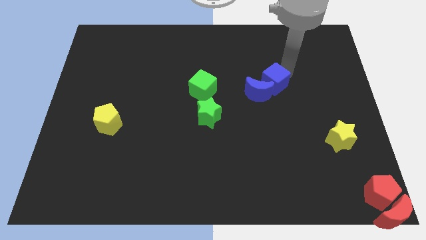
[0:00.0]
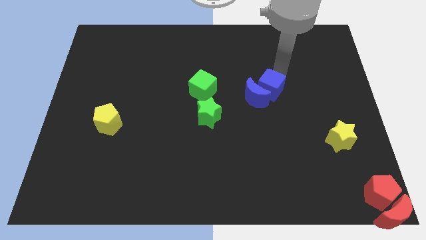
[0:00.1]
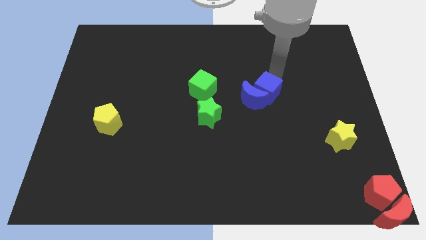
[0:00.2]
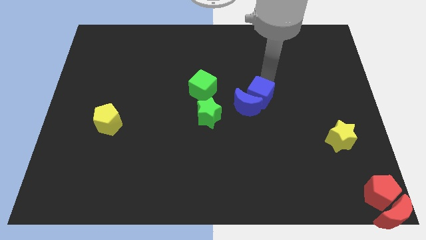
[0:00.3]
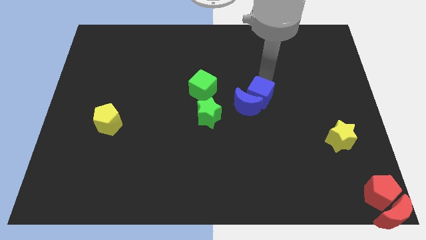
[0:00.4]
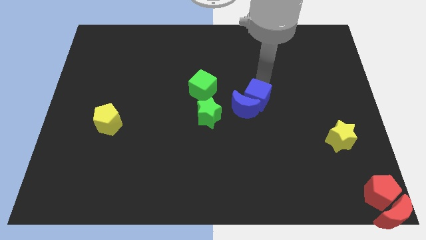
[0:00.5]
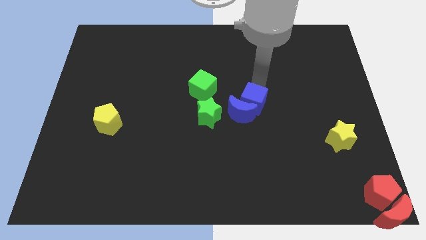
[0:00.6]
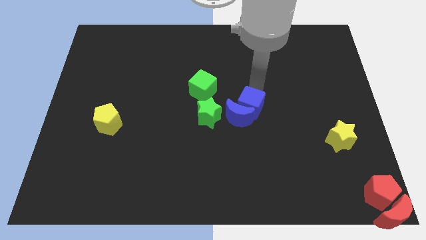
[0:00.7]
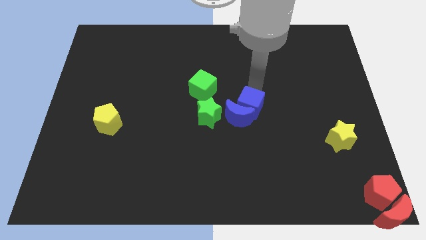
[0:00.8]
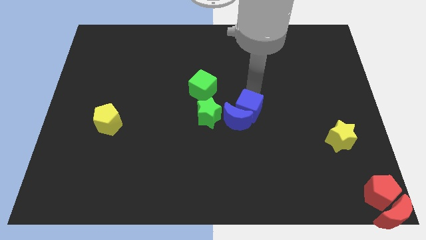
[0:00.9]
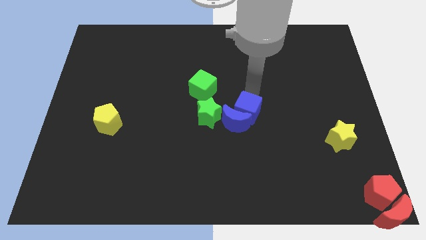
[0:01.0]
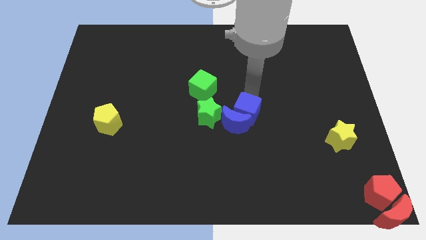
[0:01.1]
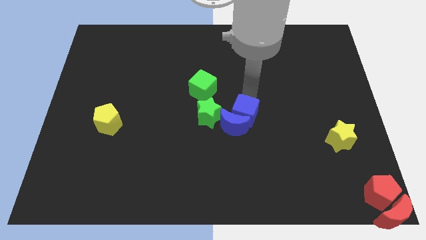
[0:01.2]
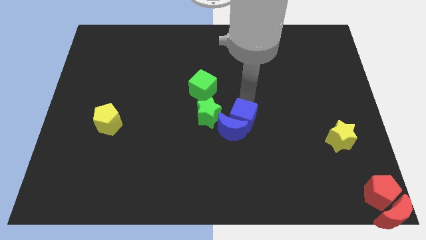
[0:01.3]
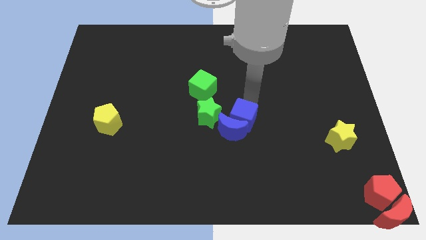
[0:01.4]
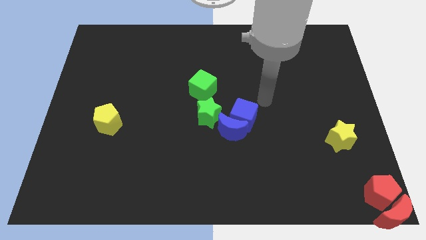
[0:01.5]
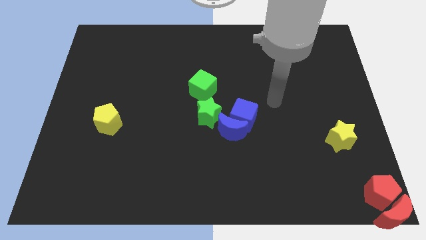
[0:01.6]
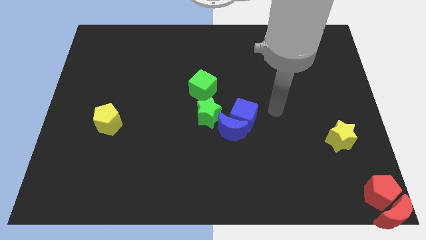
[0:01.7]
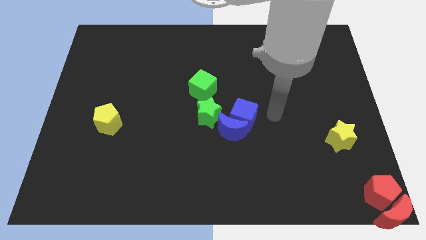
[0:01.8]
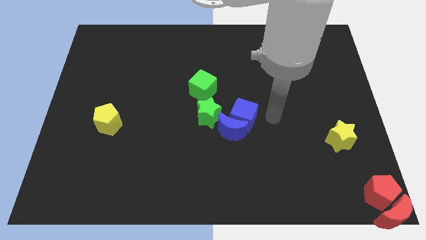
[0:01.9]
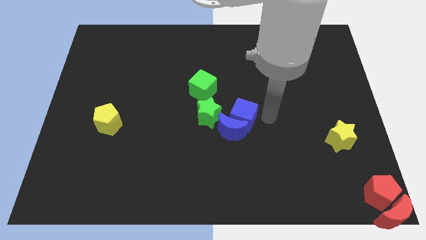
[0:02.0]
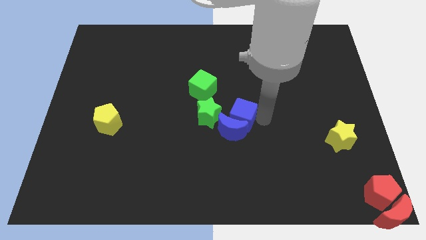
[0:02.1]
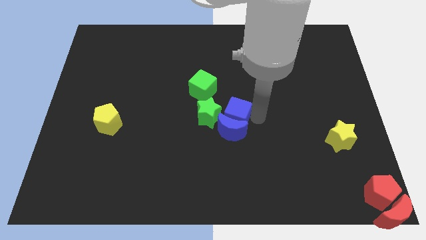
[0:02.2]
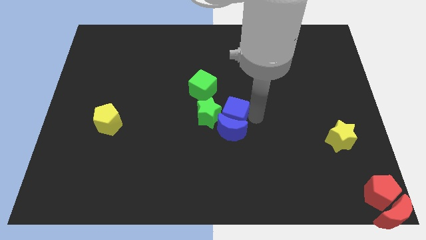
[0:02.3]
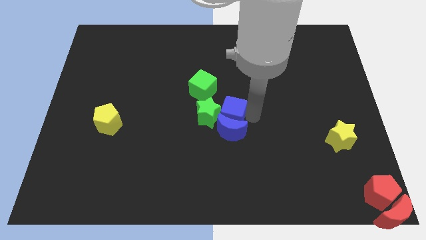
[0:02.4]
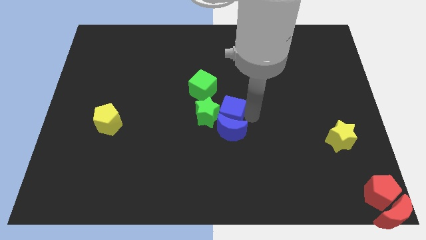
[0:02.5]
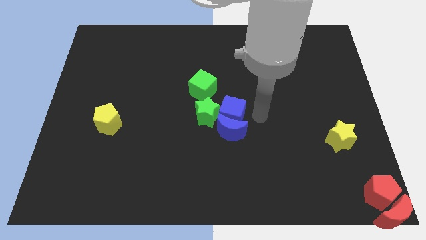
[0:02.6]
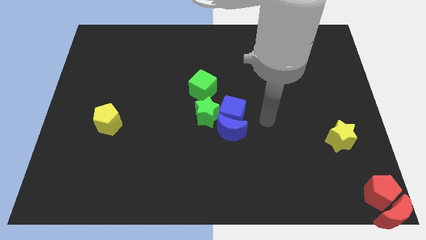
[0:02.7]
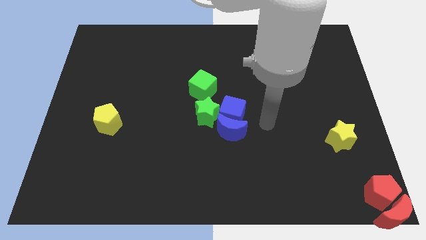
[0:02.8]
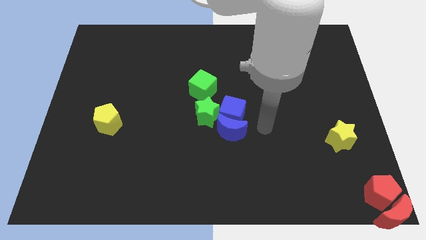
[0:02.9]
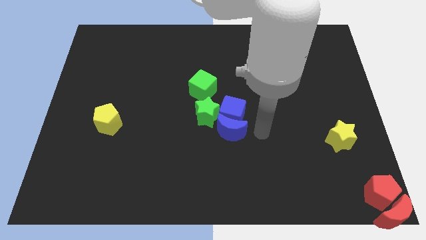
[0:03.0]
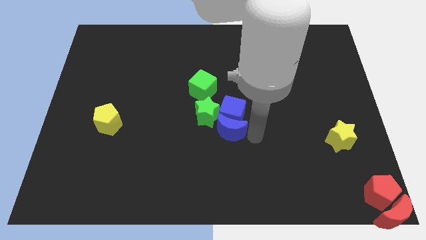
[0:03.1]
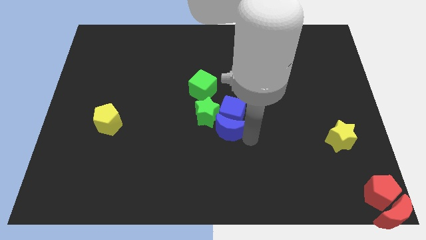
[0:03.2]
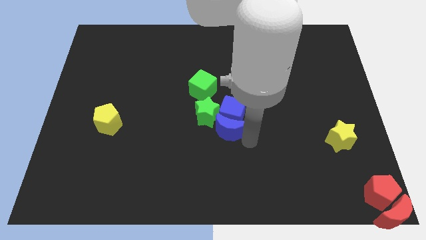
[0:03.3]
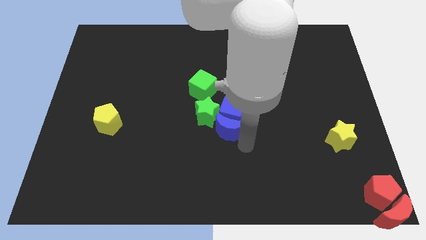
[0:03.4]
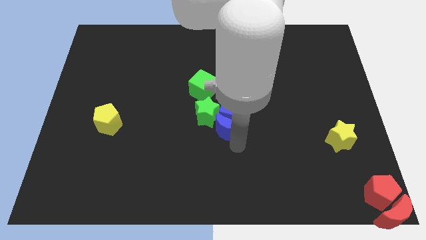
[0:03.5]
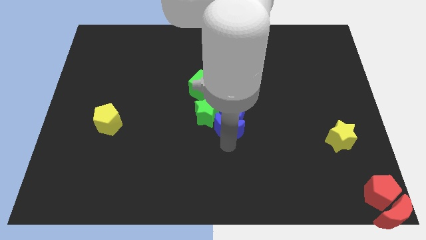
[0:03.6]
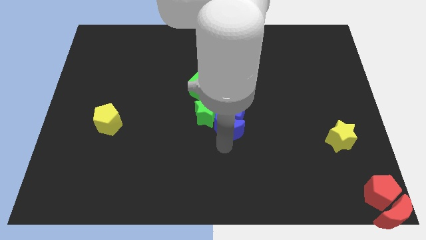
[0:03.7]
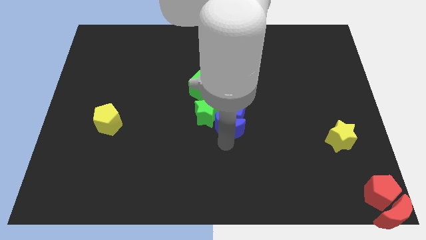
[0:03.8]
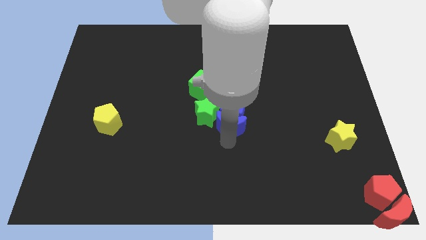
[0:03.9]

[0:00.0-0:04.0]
move the blue blocks to the right of the green star

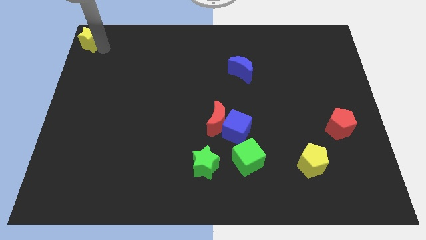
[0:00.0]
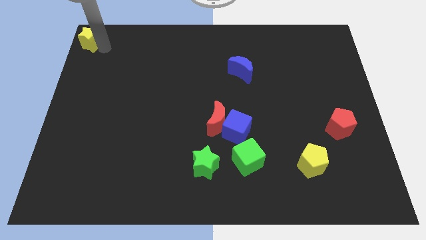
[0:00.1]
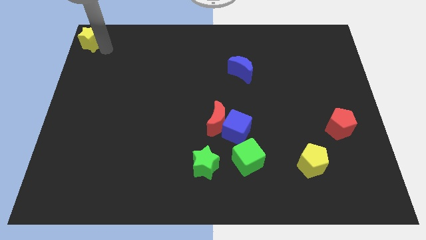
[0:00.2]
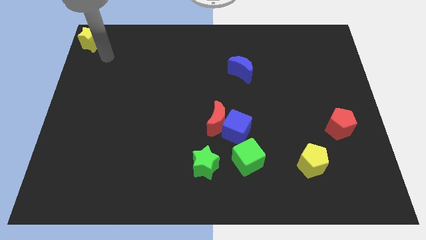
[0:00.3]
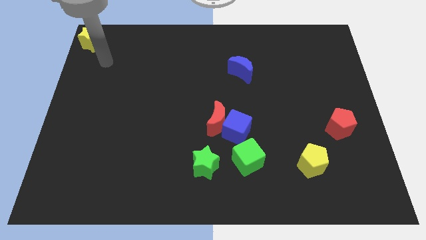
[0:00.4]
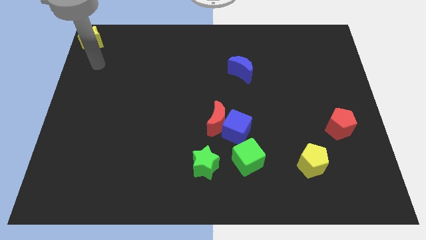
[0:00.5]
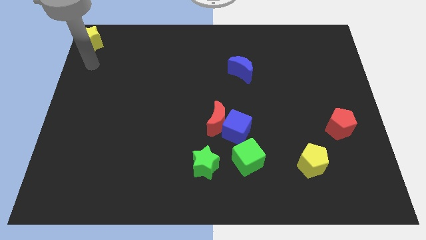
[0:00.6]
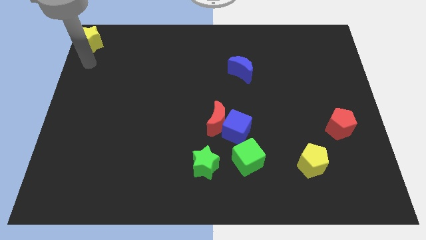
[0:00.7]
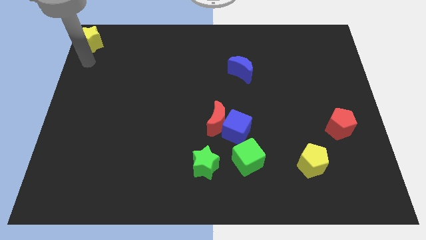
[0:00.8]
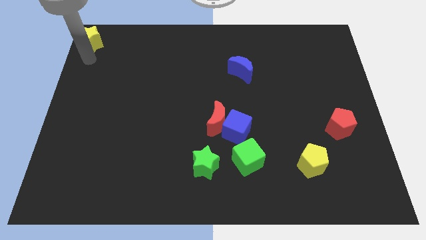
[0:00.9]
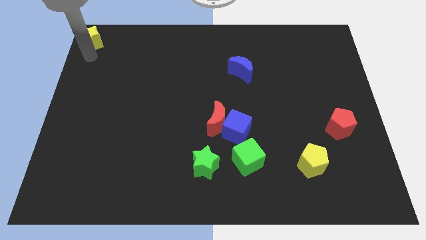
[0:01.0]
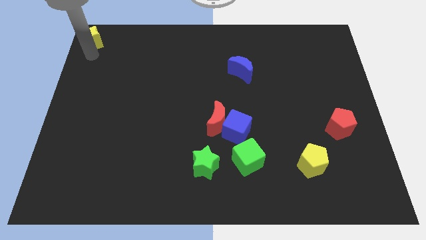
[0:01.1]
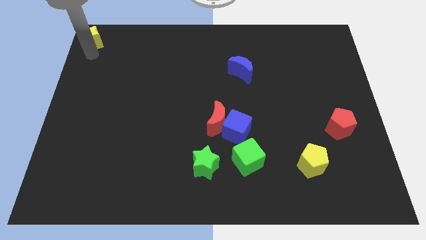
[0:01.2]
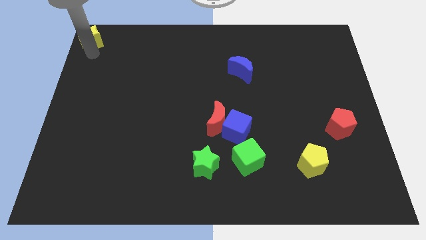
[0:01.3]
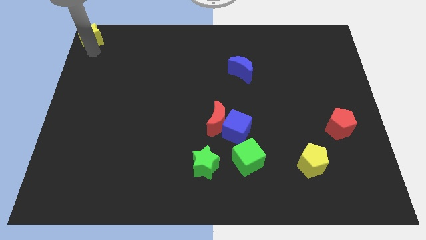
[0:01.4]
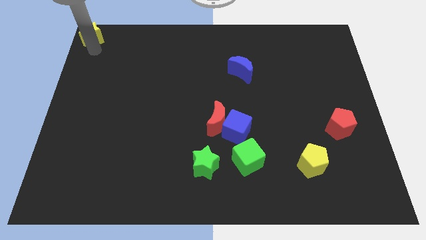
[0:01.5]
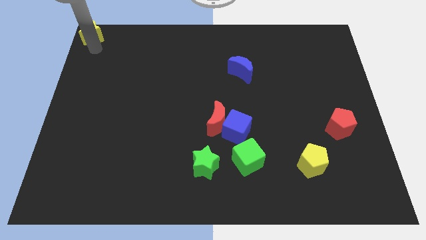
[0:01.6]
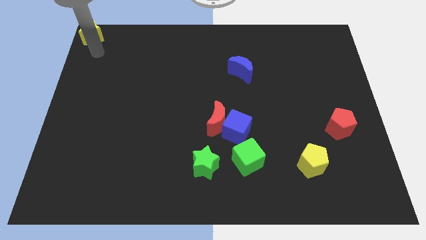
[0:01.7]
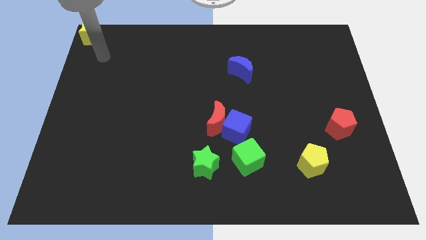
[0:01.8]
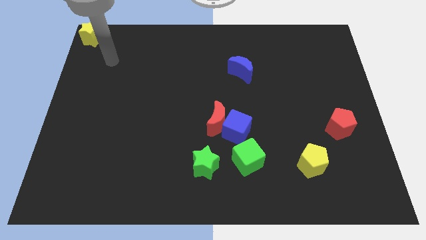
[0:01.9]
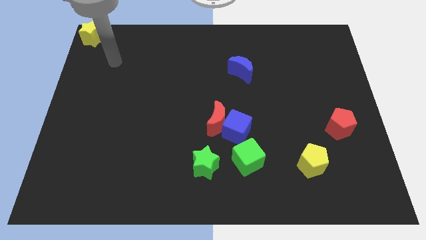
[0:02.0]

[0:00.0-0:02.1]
place the yellow star to the top left corner of the board

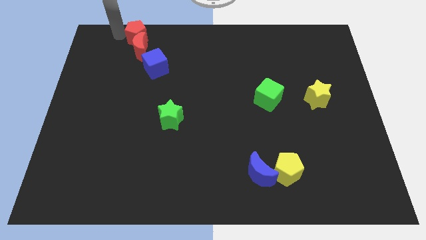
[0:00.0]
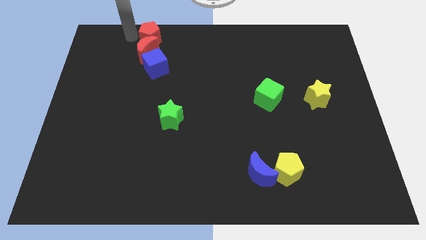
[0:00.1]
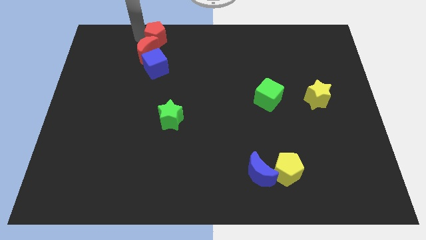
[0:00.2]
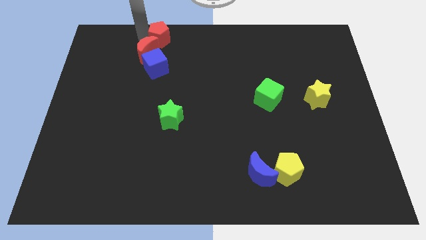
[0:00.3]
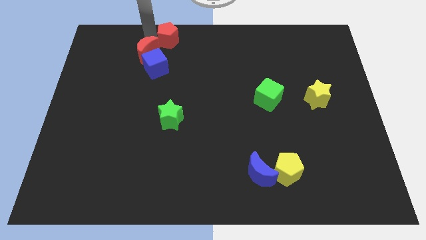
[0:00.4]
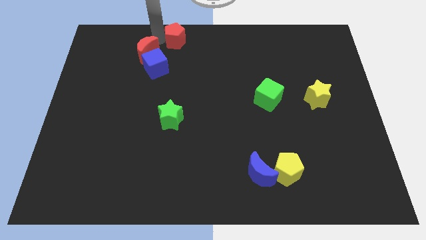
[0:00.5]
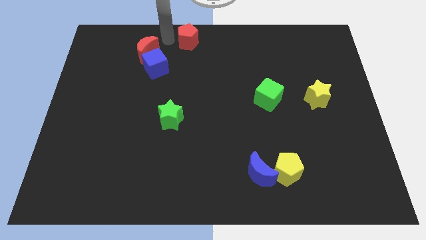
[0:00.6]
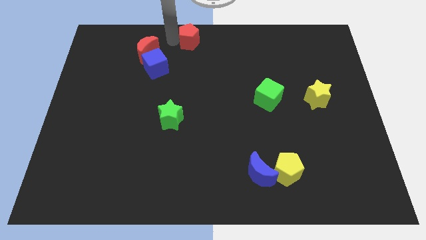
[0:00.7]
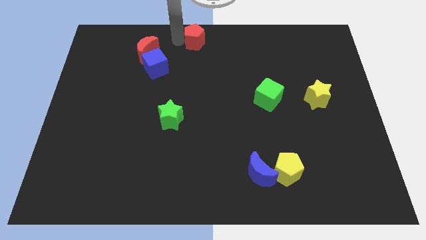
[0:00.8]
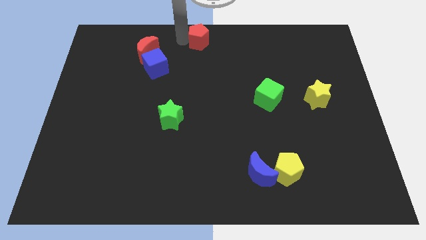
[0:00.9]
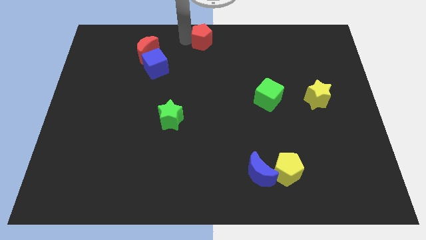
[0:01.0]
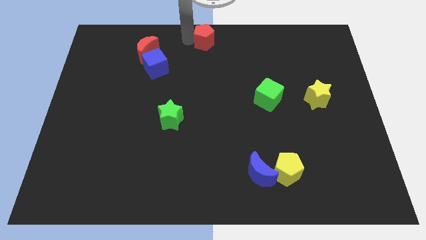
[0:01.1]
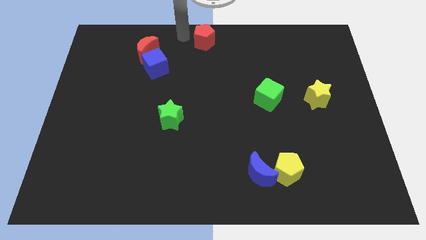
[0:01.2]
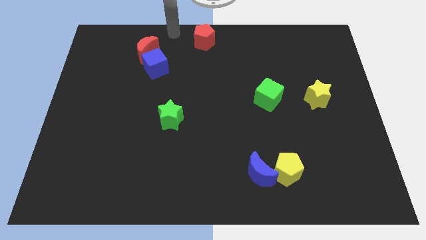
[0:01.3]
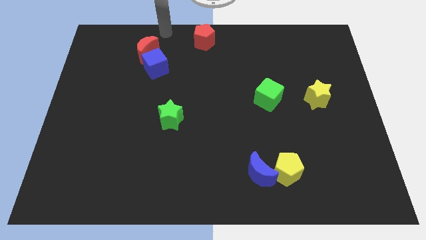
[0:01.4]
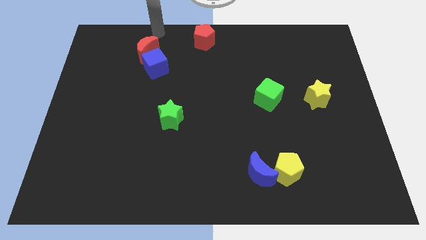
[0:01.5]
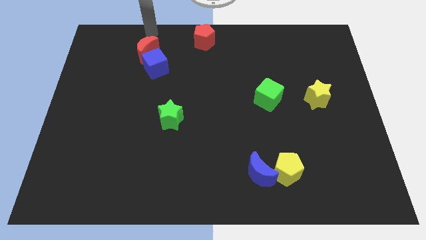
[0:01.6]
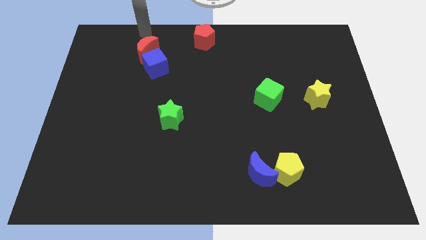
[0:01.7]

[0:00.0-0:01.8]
move the red pentagon towards the top center of the board

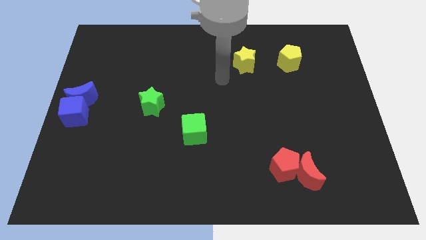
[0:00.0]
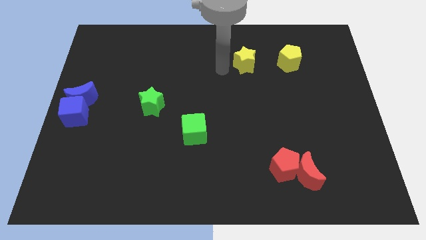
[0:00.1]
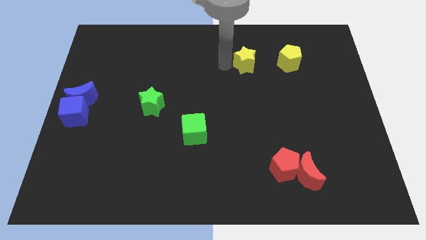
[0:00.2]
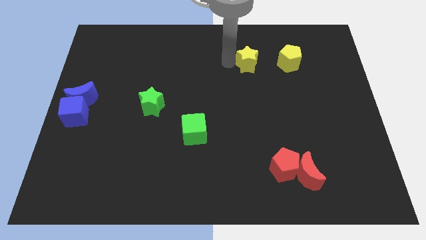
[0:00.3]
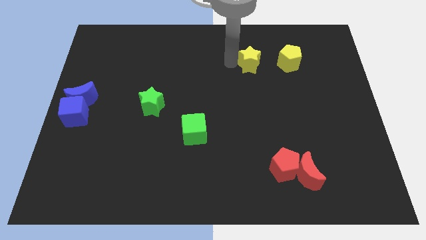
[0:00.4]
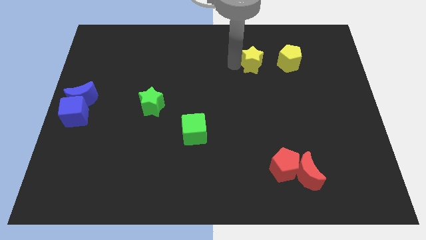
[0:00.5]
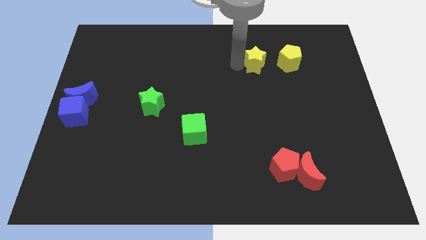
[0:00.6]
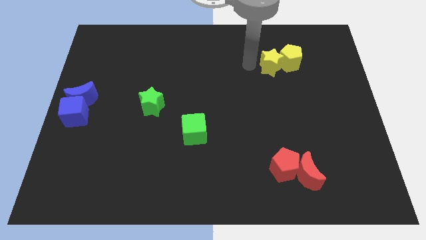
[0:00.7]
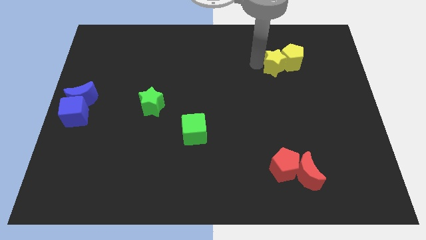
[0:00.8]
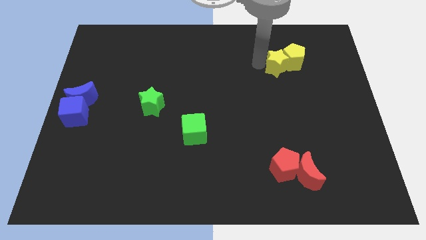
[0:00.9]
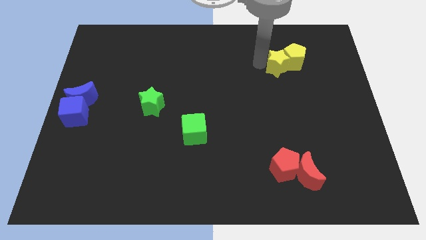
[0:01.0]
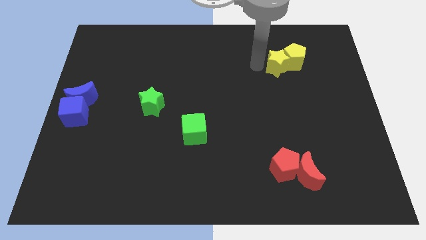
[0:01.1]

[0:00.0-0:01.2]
push the yellow star into the yellow pentagon
